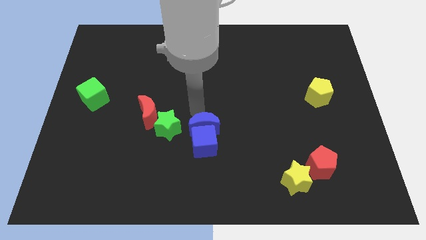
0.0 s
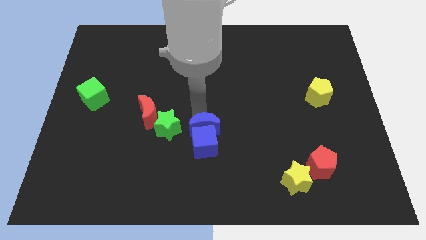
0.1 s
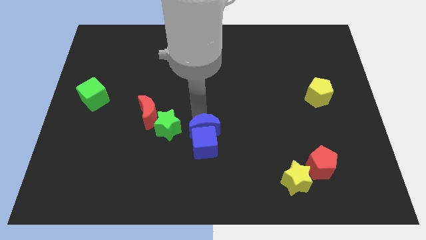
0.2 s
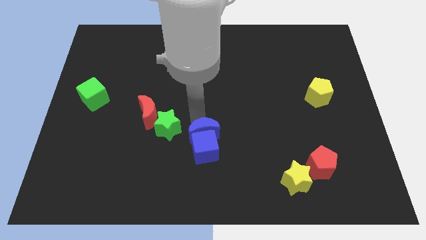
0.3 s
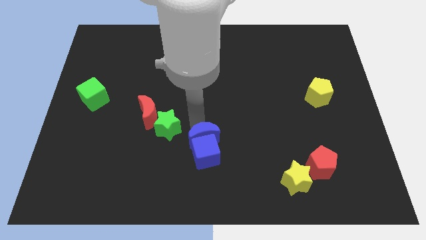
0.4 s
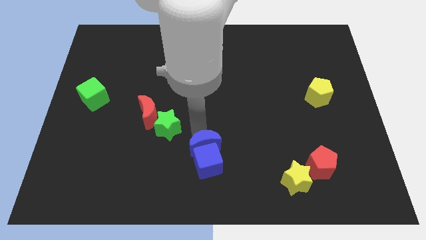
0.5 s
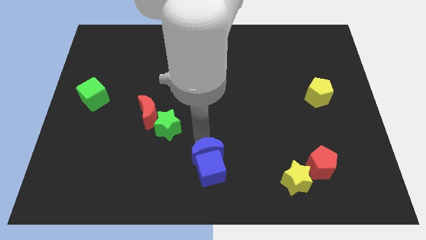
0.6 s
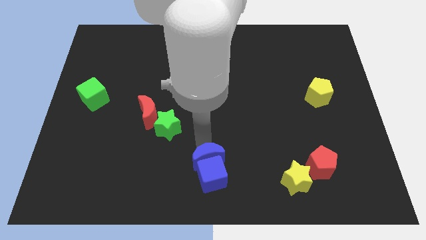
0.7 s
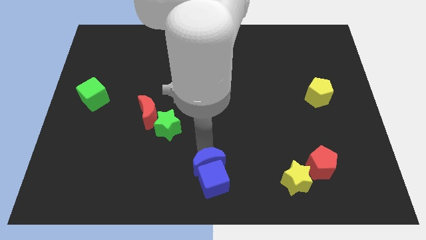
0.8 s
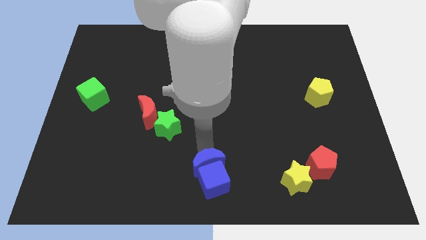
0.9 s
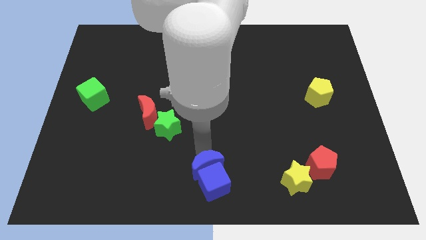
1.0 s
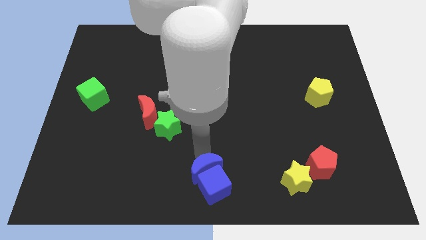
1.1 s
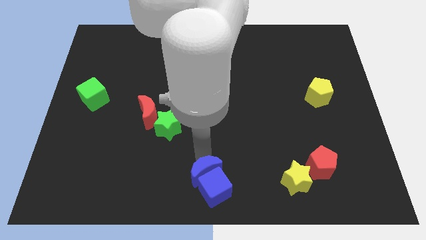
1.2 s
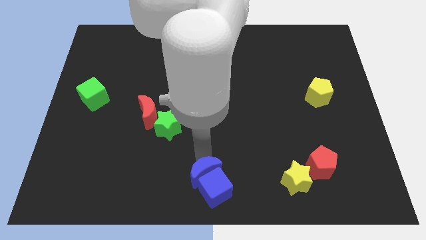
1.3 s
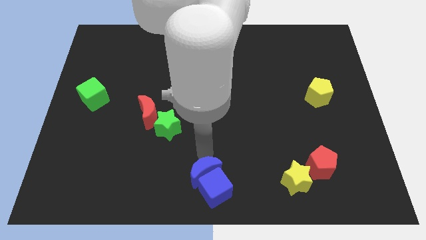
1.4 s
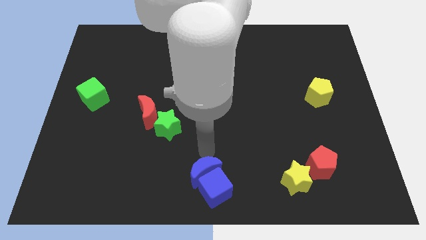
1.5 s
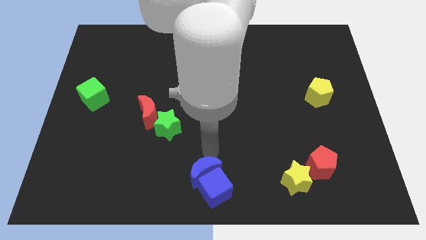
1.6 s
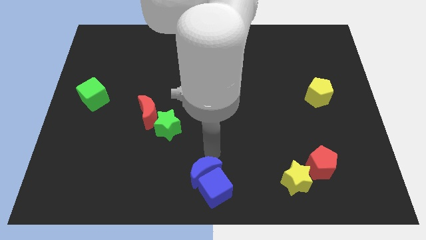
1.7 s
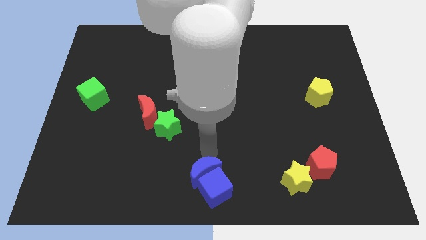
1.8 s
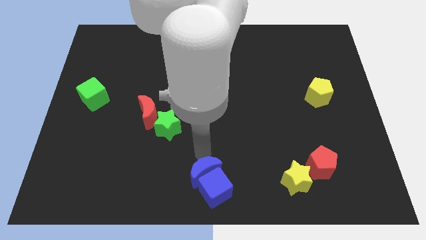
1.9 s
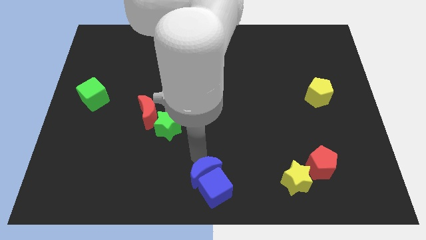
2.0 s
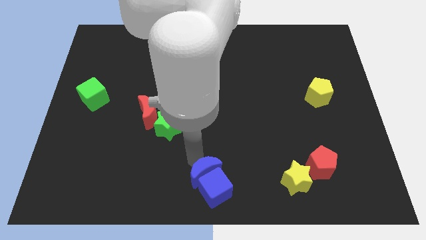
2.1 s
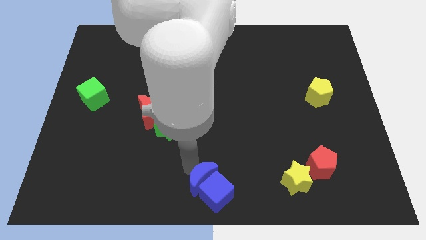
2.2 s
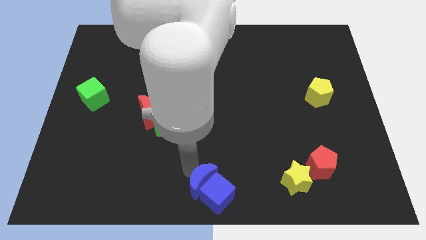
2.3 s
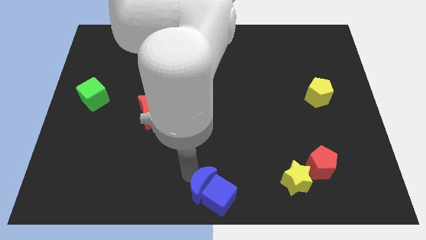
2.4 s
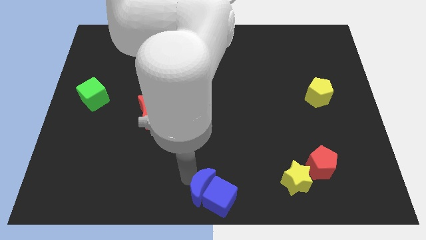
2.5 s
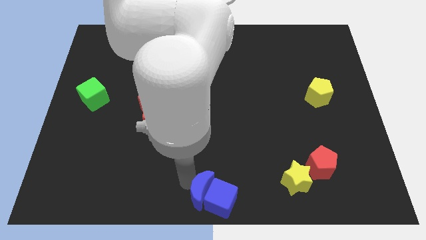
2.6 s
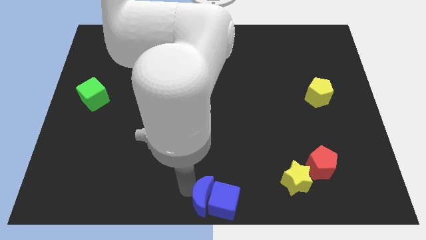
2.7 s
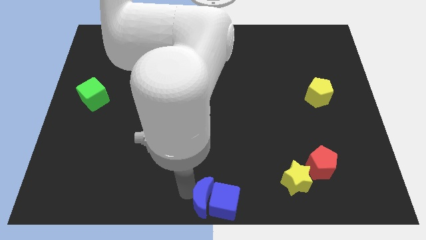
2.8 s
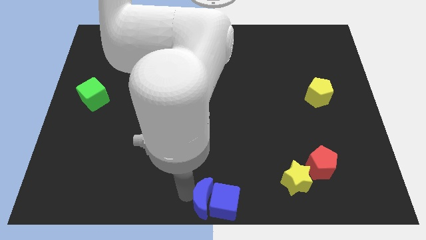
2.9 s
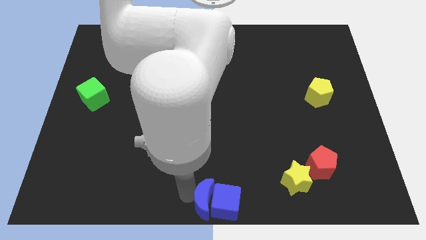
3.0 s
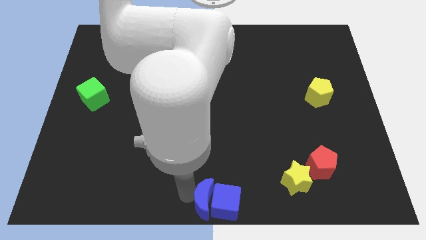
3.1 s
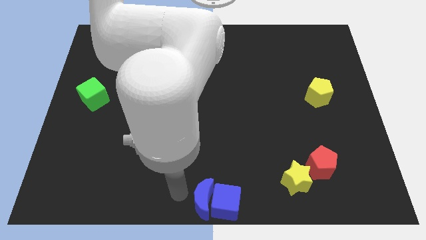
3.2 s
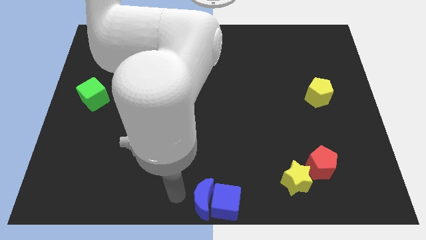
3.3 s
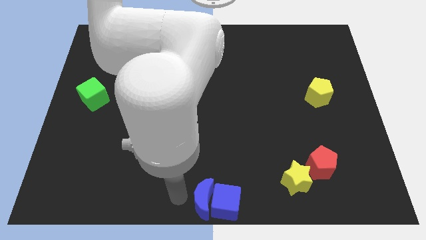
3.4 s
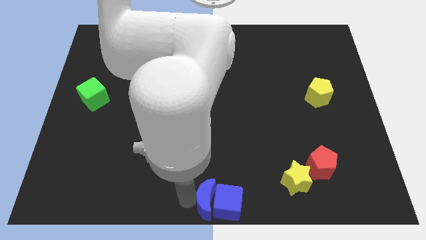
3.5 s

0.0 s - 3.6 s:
place the blue blocks to the bottom center

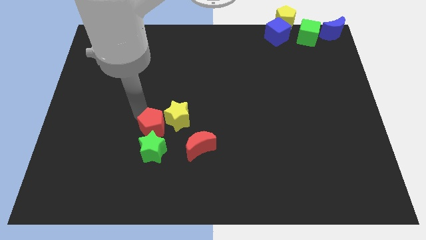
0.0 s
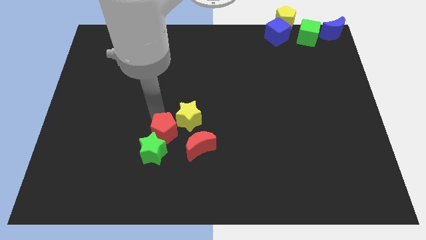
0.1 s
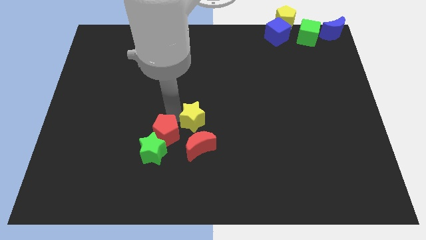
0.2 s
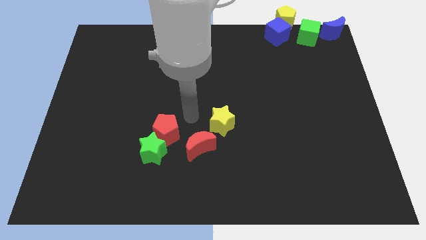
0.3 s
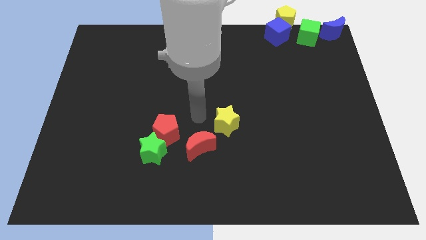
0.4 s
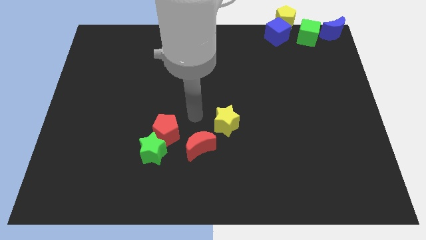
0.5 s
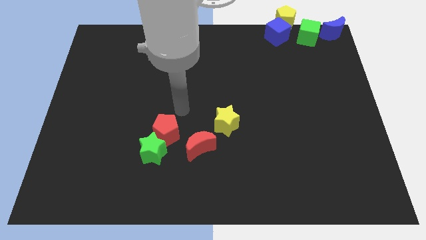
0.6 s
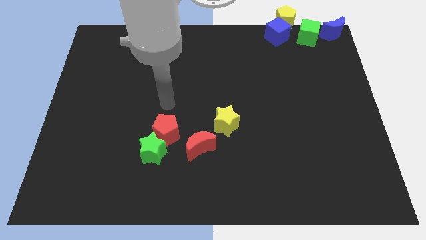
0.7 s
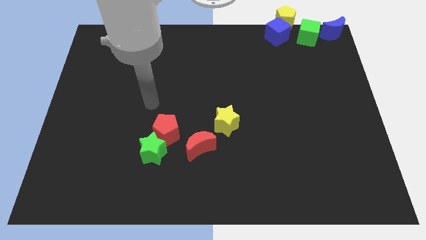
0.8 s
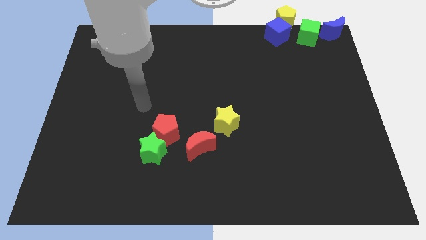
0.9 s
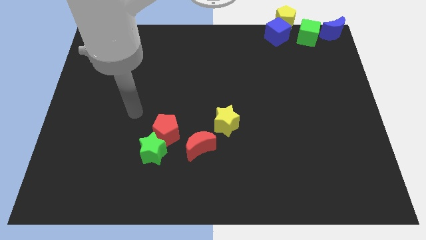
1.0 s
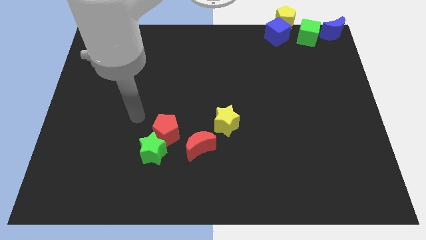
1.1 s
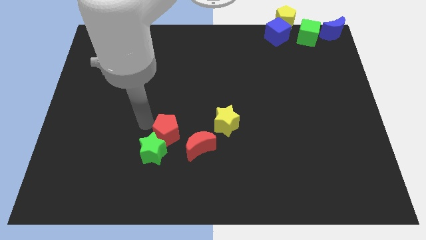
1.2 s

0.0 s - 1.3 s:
move the yellow star away from the red pentagon

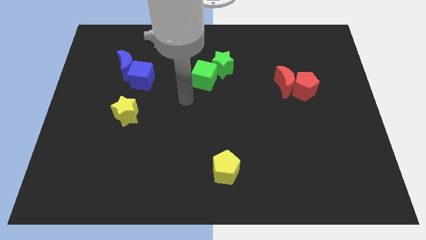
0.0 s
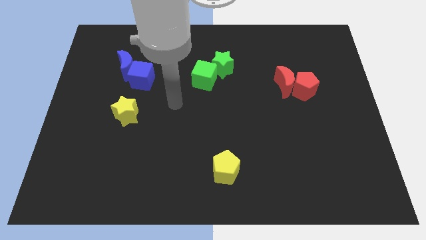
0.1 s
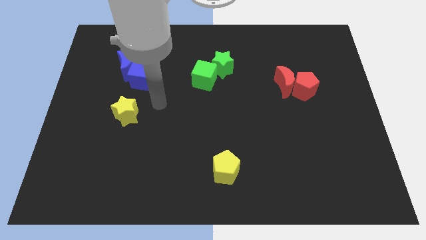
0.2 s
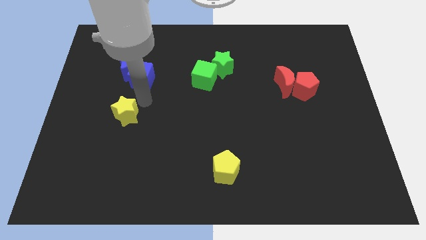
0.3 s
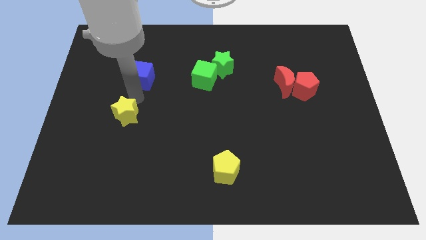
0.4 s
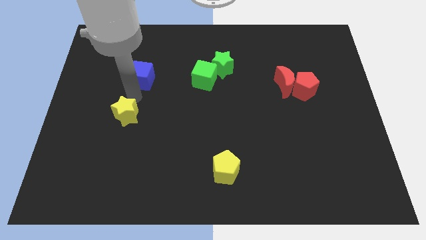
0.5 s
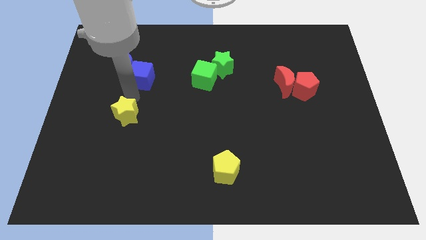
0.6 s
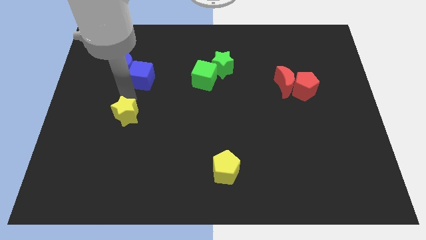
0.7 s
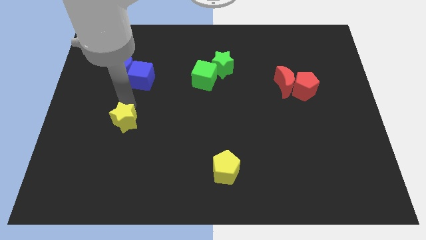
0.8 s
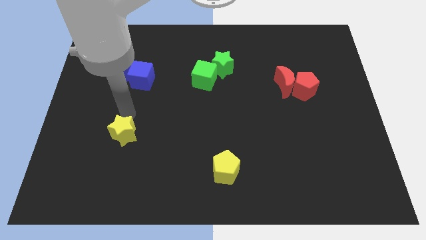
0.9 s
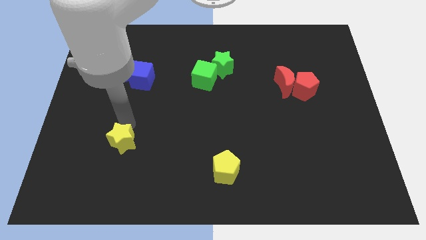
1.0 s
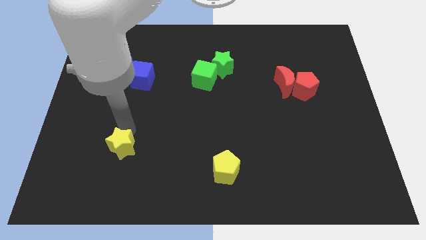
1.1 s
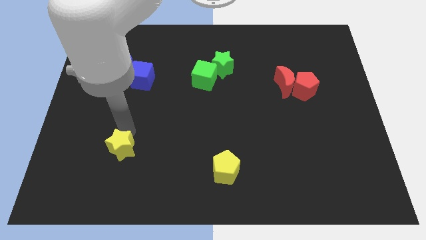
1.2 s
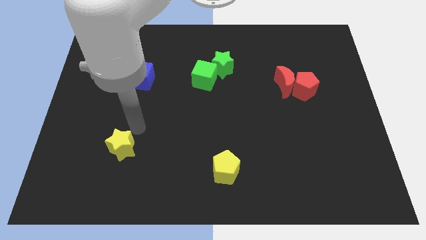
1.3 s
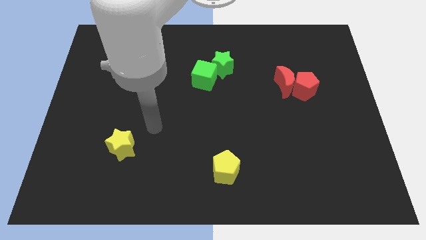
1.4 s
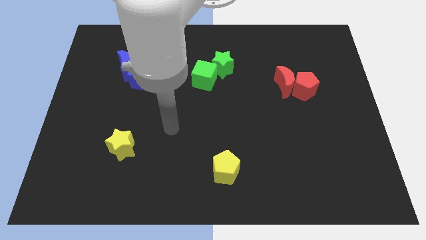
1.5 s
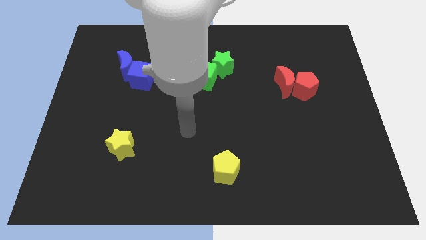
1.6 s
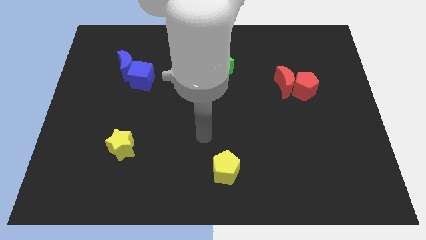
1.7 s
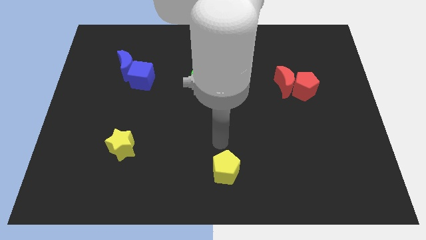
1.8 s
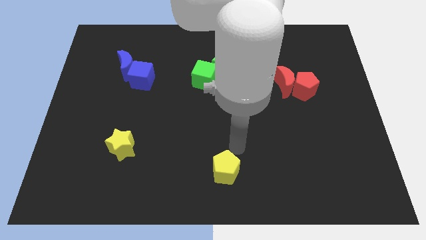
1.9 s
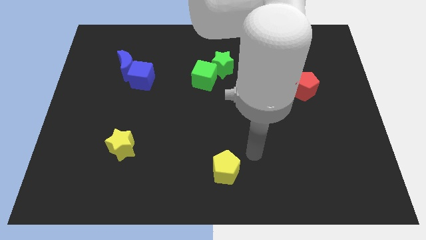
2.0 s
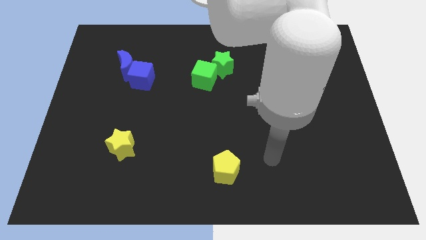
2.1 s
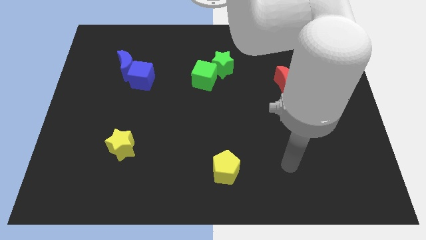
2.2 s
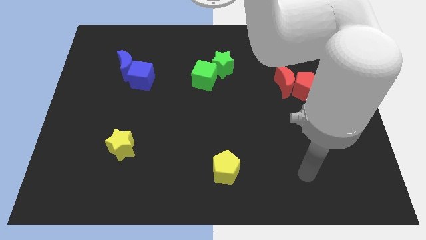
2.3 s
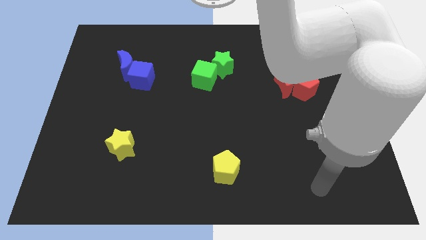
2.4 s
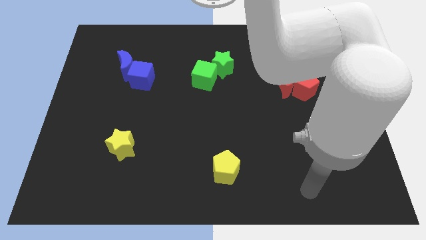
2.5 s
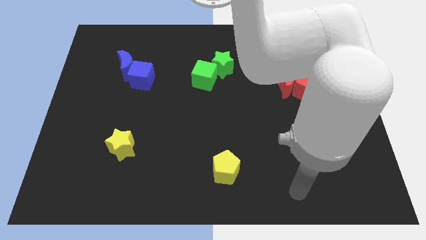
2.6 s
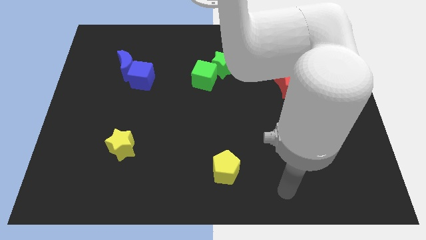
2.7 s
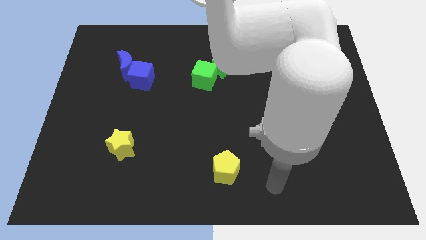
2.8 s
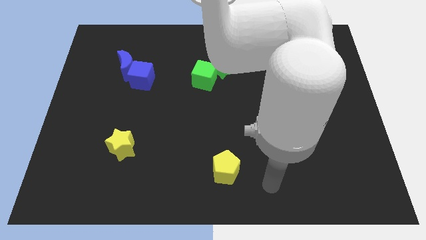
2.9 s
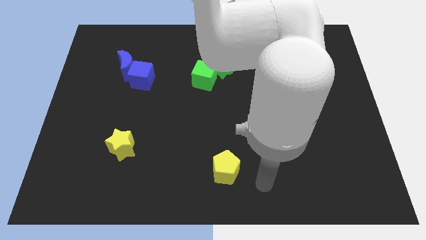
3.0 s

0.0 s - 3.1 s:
move the yellow star away from the blue blocks

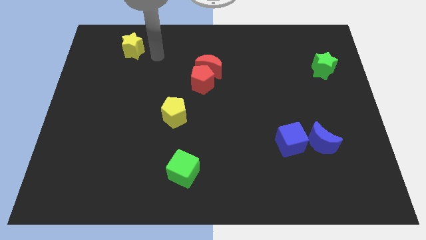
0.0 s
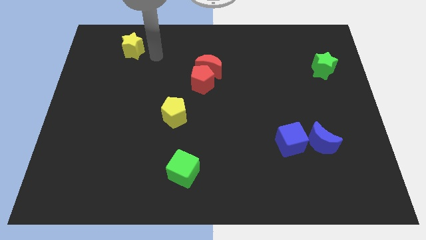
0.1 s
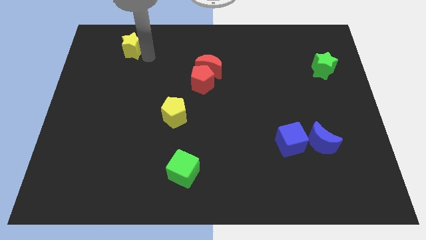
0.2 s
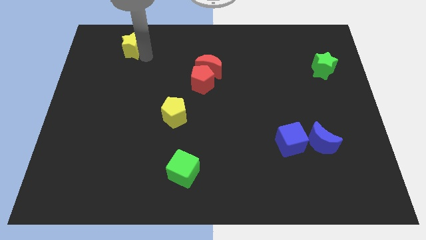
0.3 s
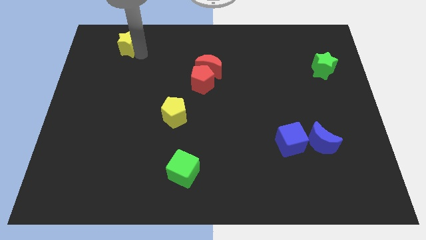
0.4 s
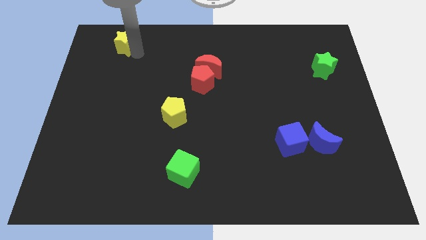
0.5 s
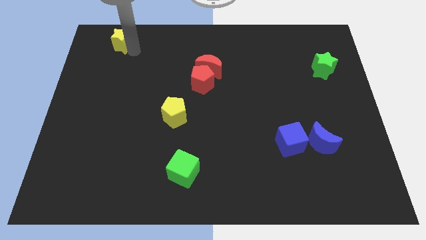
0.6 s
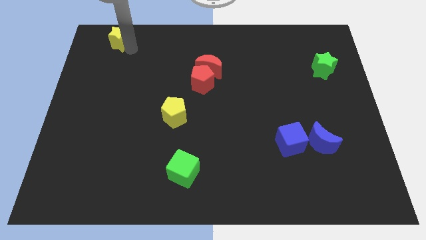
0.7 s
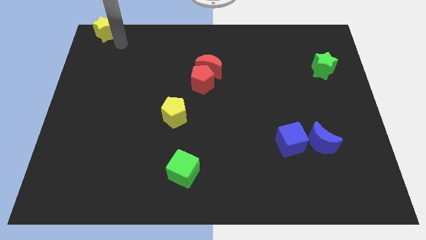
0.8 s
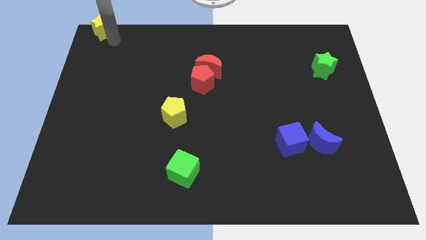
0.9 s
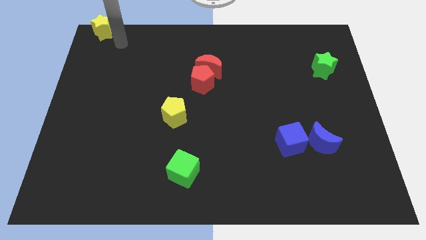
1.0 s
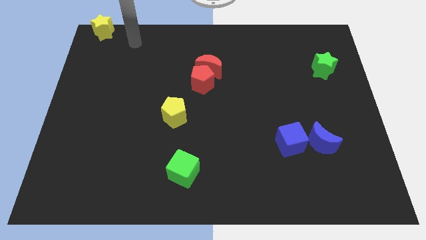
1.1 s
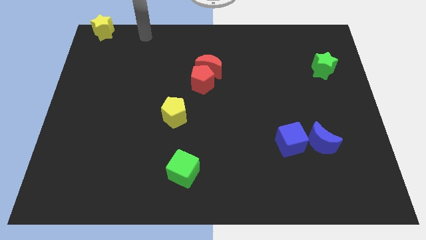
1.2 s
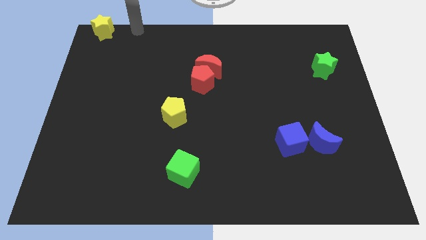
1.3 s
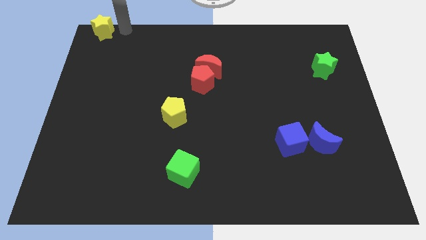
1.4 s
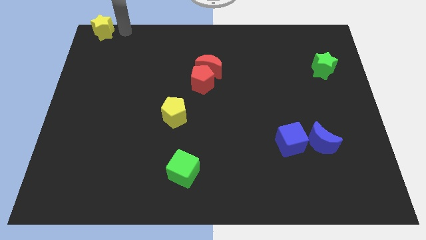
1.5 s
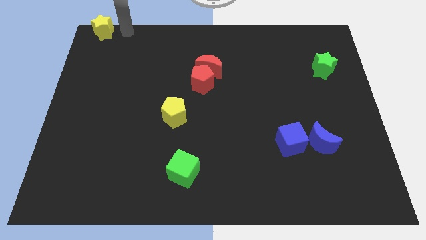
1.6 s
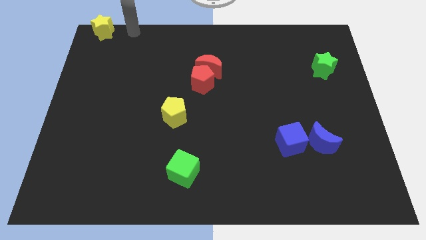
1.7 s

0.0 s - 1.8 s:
move the yellow star to the top left side
